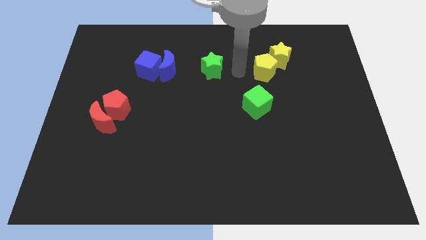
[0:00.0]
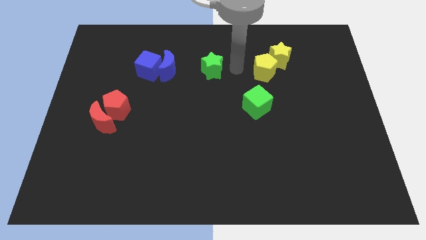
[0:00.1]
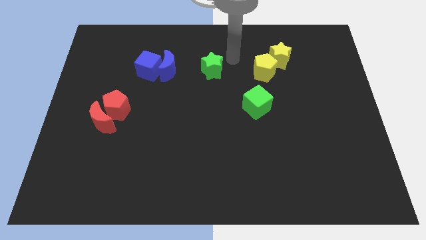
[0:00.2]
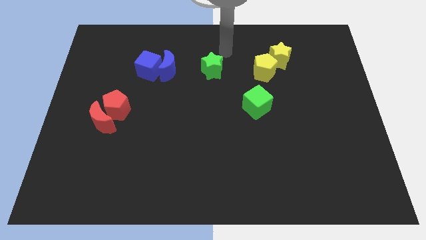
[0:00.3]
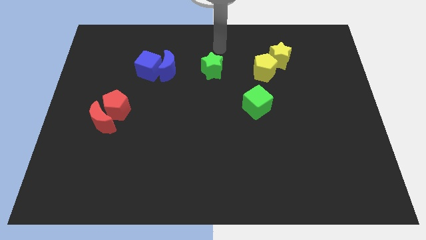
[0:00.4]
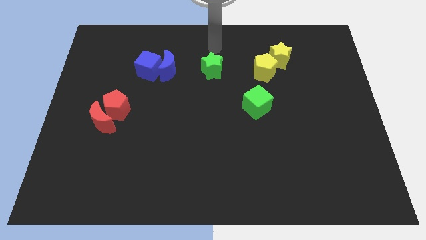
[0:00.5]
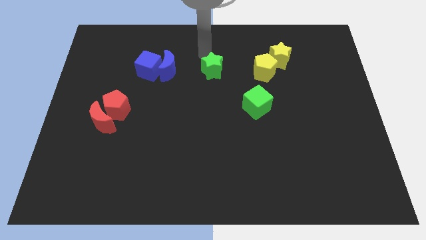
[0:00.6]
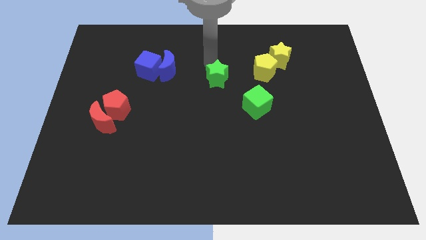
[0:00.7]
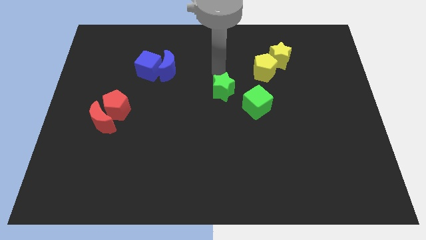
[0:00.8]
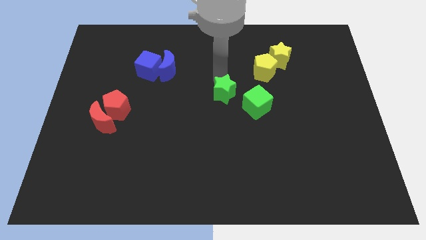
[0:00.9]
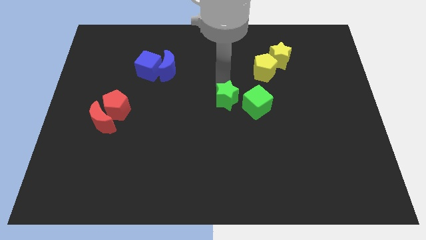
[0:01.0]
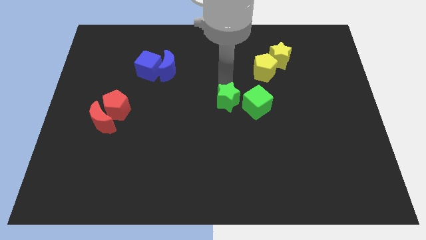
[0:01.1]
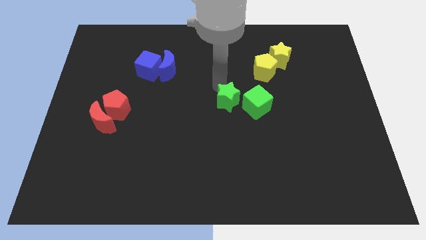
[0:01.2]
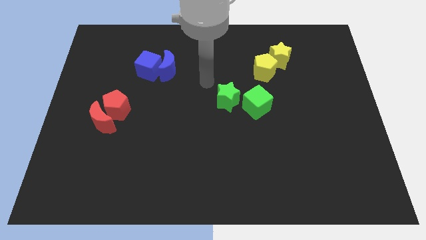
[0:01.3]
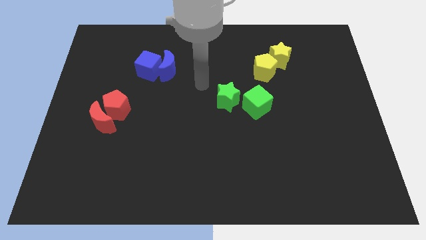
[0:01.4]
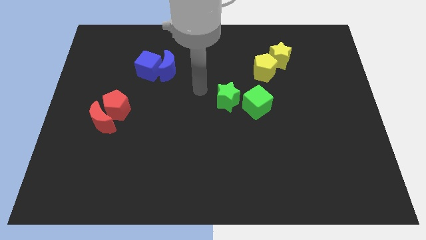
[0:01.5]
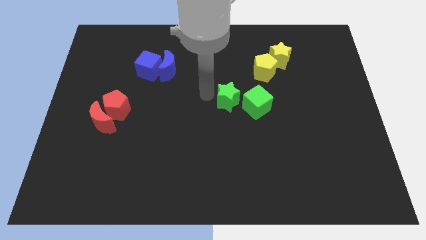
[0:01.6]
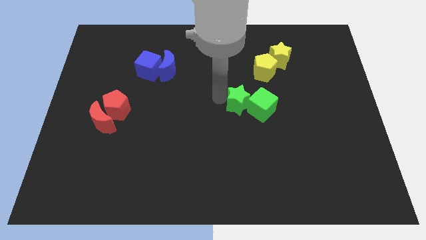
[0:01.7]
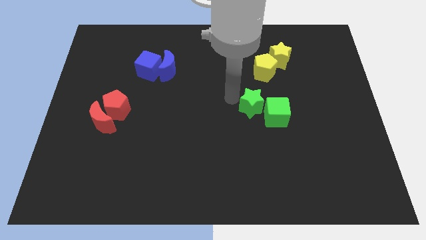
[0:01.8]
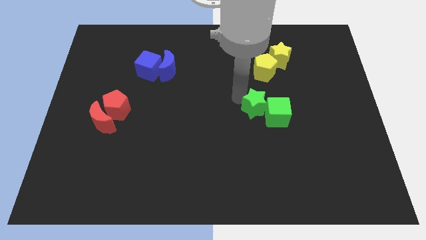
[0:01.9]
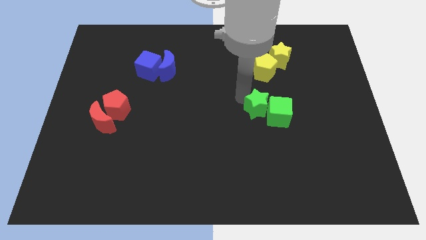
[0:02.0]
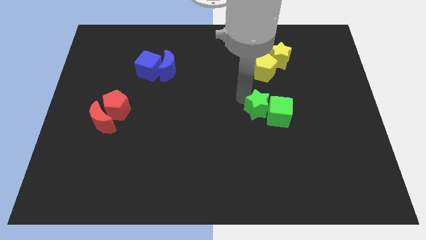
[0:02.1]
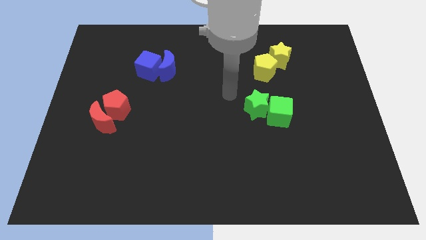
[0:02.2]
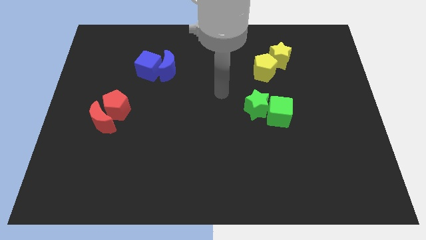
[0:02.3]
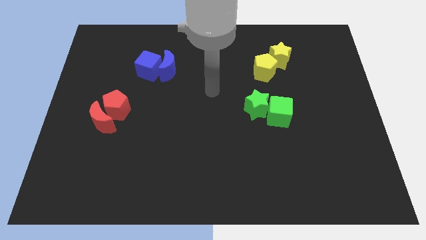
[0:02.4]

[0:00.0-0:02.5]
push the green star into the green cube

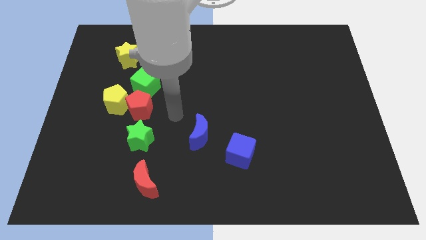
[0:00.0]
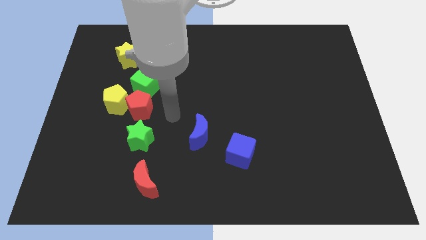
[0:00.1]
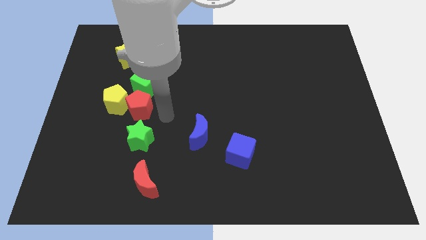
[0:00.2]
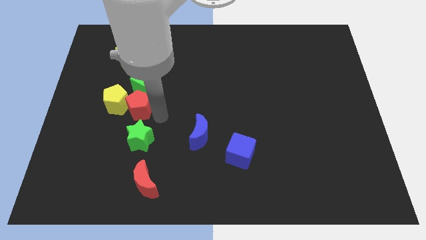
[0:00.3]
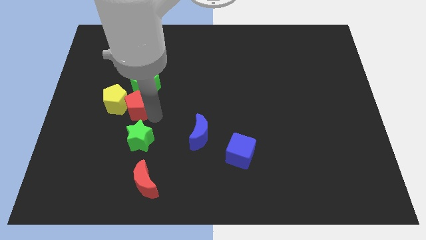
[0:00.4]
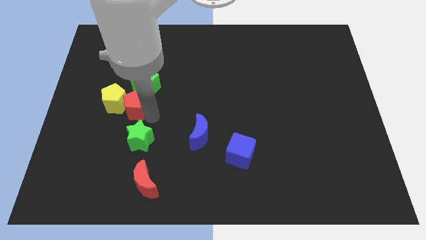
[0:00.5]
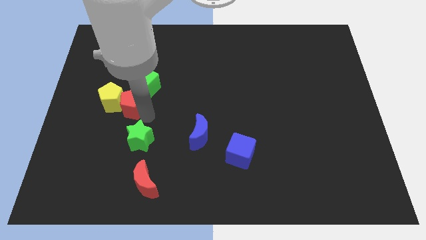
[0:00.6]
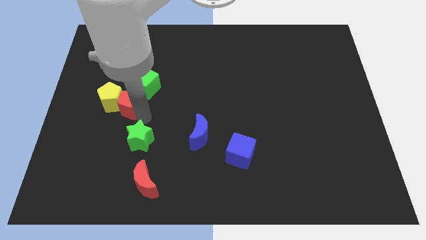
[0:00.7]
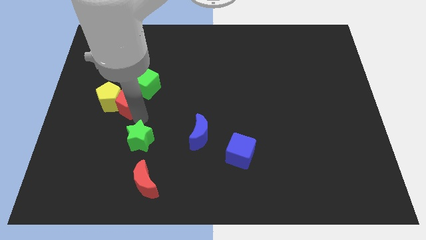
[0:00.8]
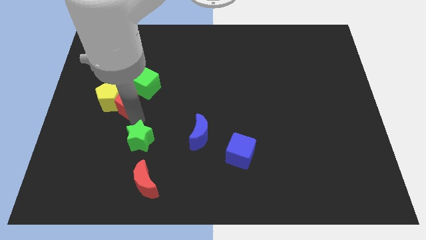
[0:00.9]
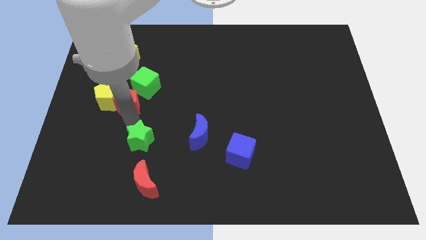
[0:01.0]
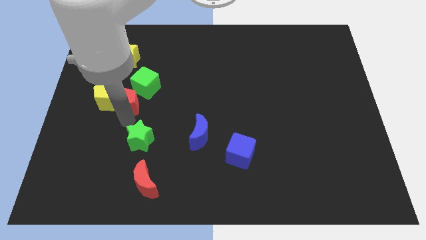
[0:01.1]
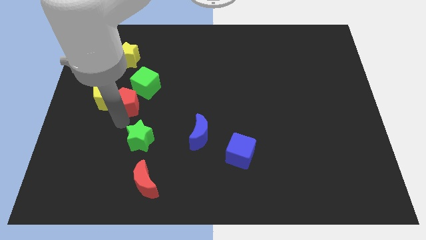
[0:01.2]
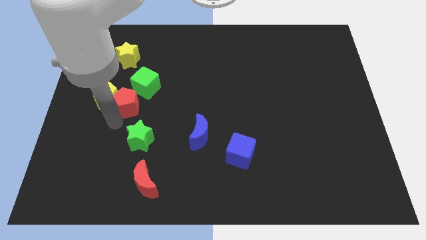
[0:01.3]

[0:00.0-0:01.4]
move the red pentagon to the left of the board

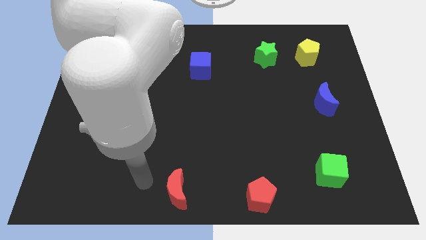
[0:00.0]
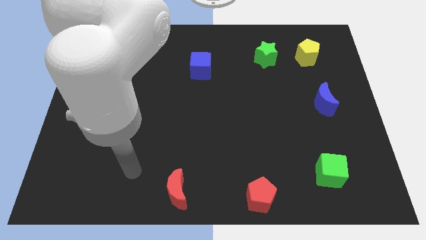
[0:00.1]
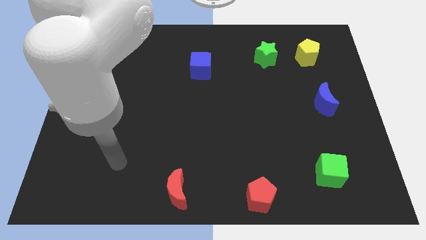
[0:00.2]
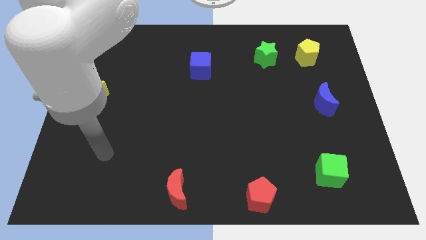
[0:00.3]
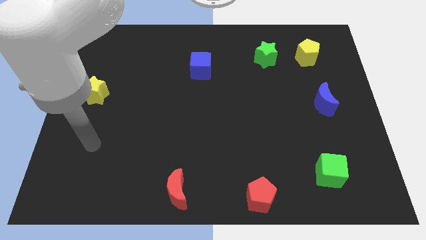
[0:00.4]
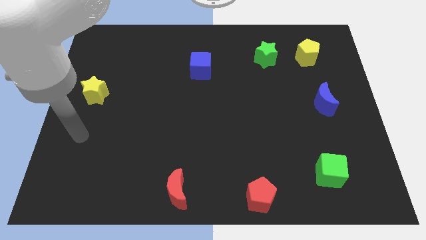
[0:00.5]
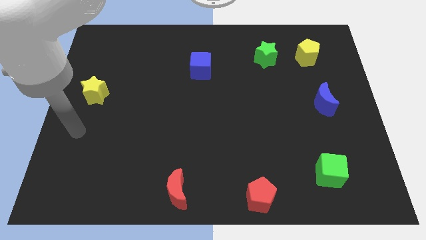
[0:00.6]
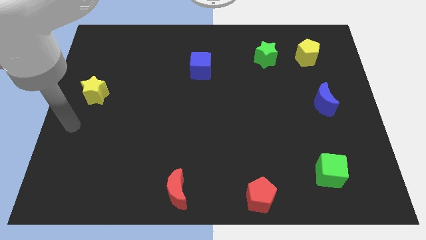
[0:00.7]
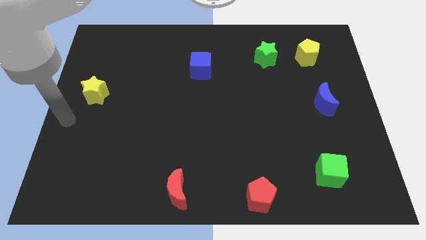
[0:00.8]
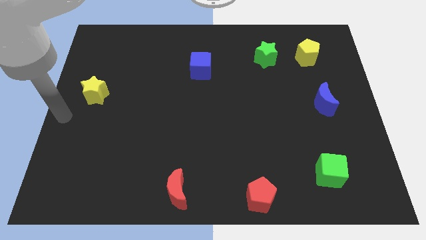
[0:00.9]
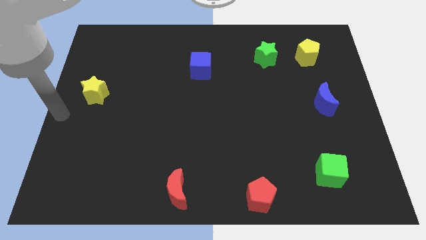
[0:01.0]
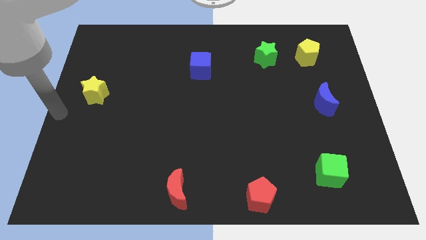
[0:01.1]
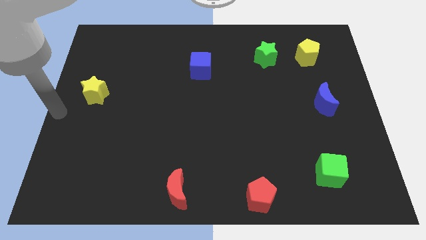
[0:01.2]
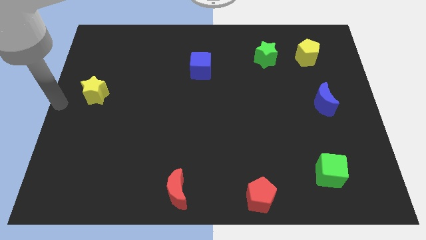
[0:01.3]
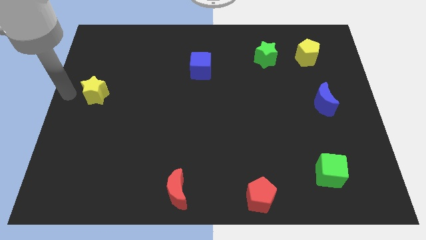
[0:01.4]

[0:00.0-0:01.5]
place your arm at the left of the yellow star

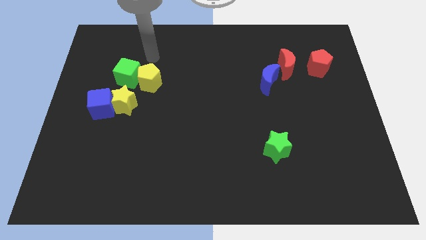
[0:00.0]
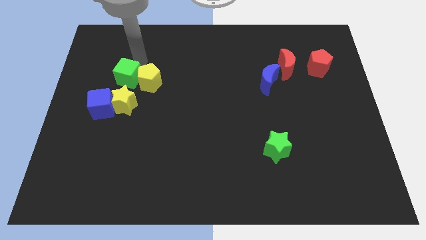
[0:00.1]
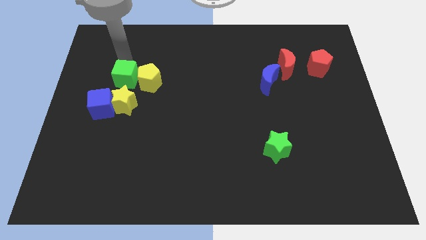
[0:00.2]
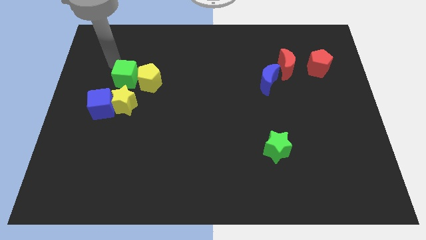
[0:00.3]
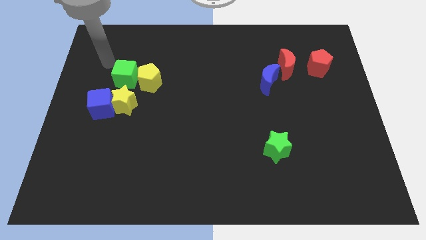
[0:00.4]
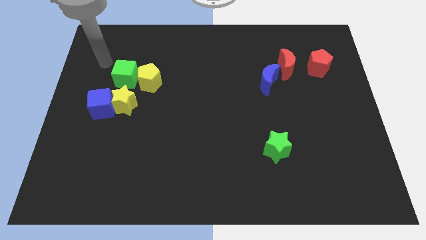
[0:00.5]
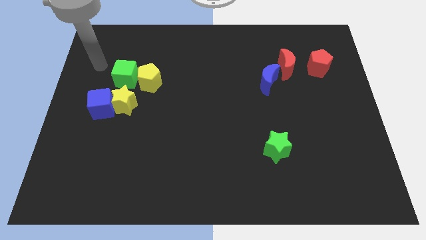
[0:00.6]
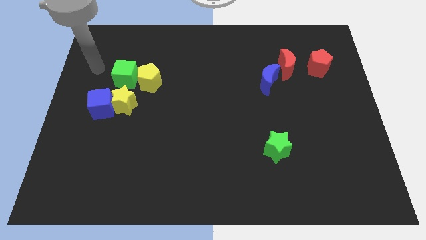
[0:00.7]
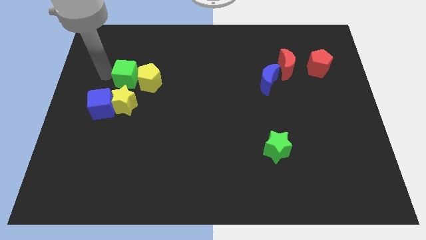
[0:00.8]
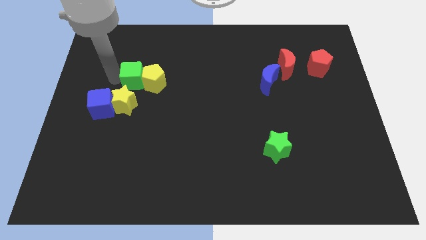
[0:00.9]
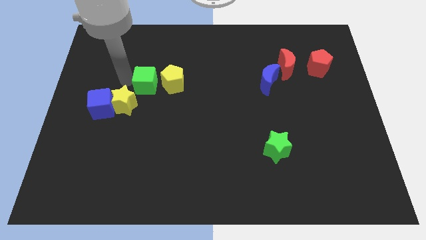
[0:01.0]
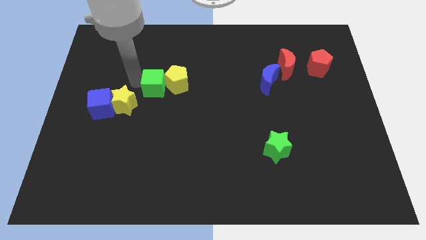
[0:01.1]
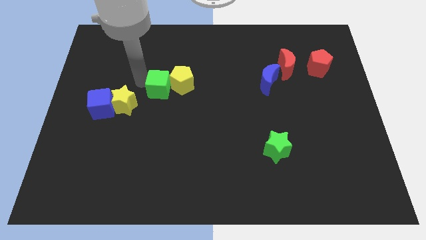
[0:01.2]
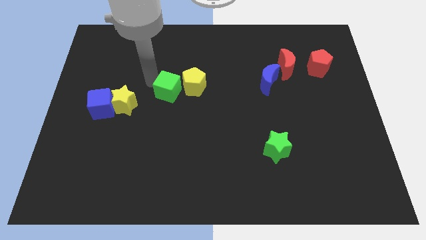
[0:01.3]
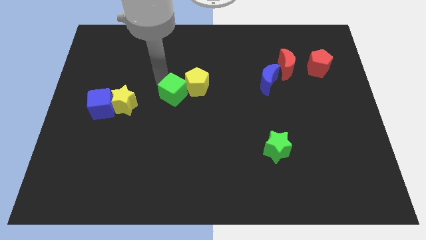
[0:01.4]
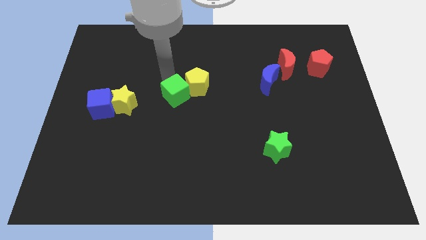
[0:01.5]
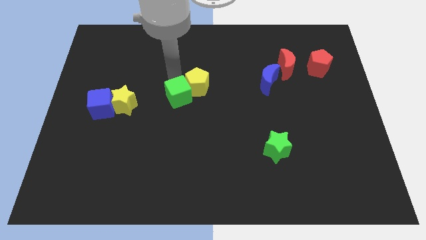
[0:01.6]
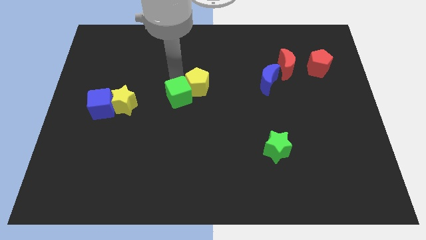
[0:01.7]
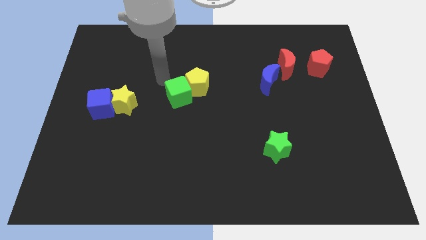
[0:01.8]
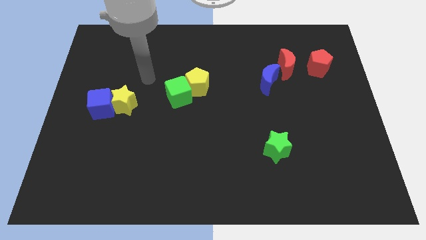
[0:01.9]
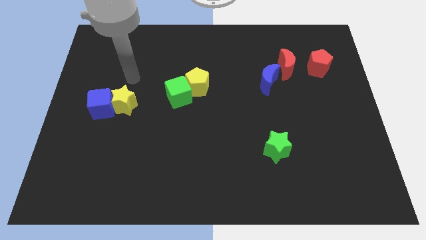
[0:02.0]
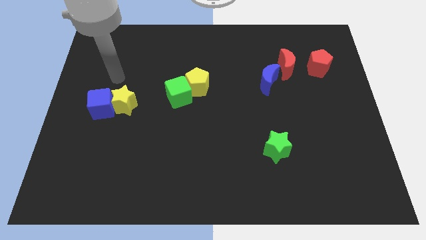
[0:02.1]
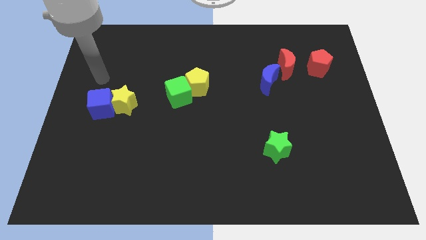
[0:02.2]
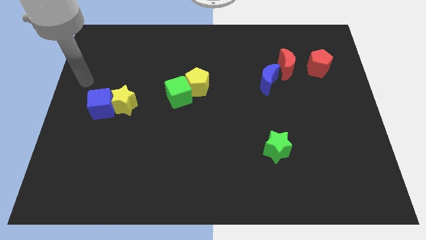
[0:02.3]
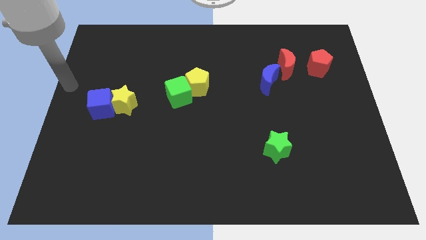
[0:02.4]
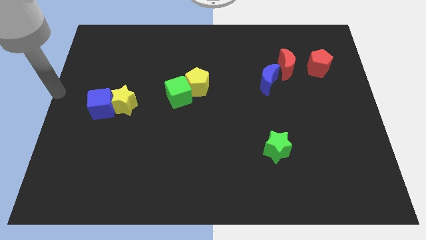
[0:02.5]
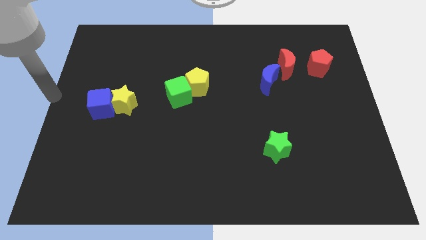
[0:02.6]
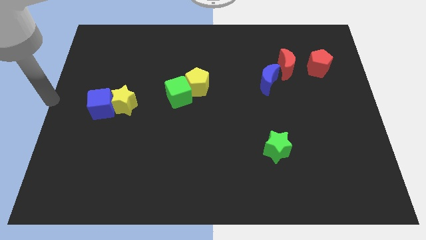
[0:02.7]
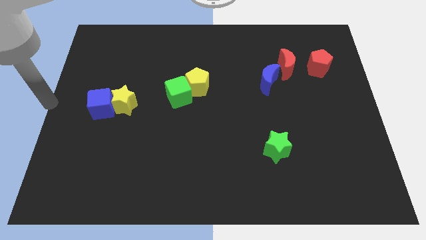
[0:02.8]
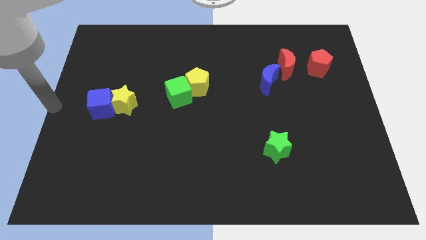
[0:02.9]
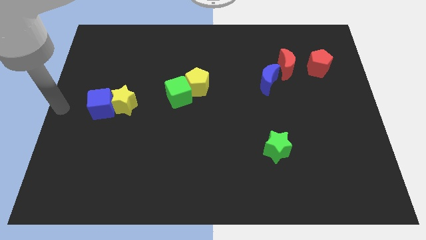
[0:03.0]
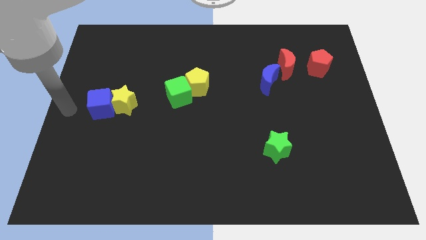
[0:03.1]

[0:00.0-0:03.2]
push the yellow pentagon and green cube to the center

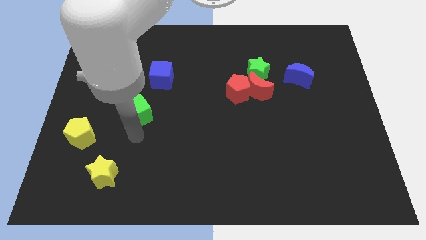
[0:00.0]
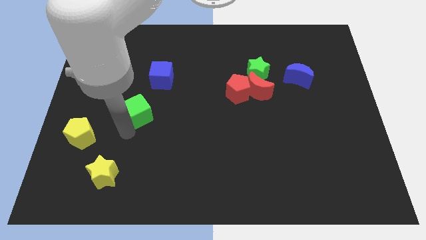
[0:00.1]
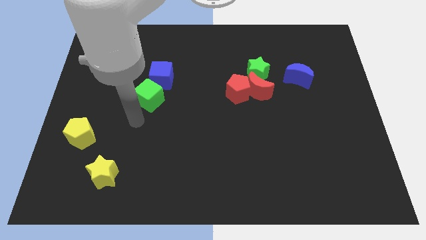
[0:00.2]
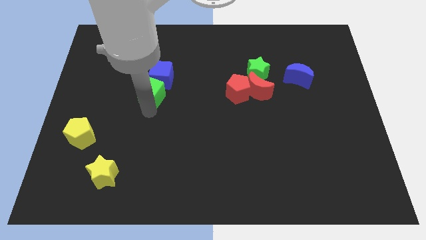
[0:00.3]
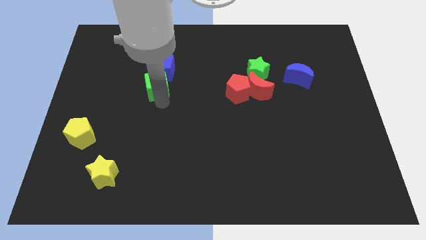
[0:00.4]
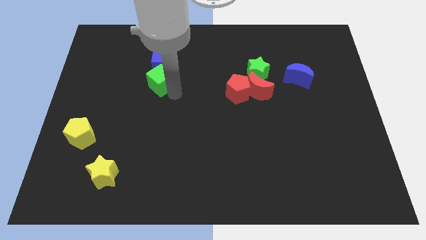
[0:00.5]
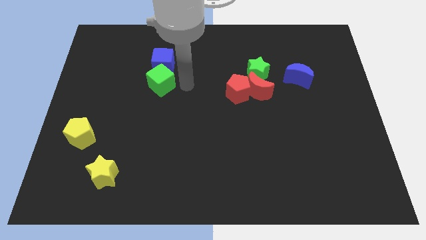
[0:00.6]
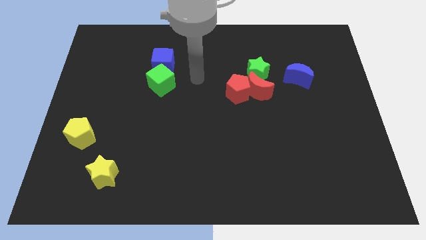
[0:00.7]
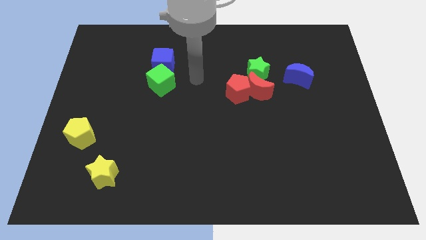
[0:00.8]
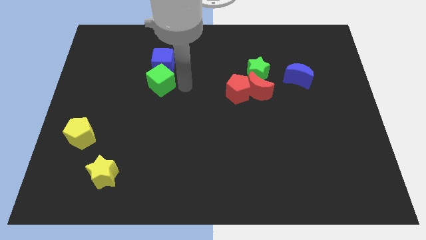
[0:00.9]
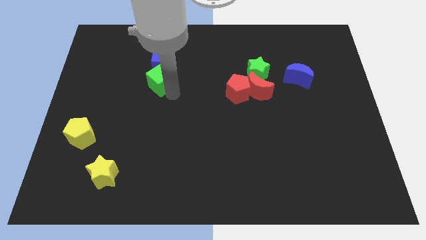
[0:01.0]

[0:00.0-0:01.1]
push green cube into blue cube
